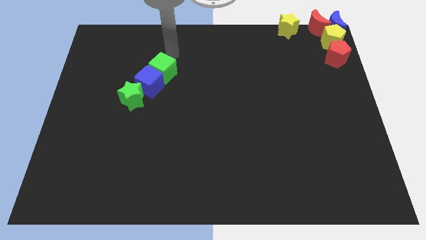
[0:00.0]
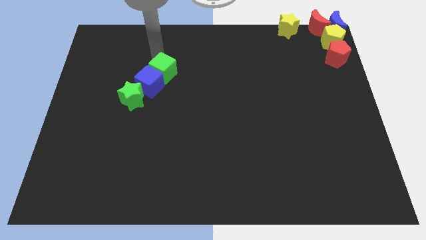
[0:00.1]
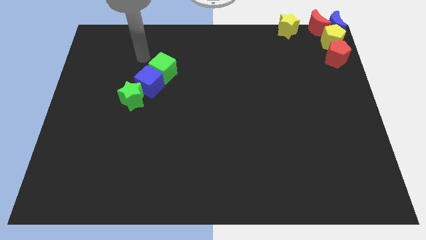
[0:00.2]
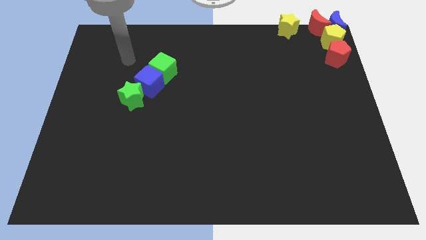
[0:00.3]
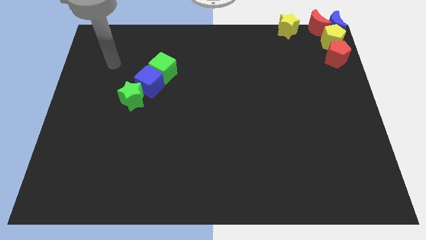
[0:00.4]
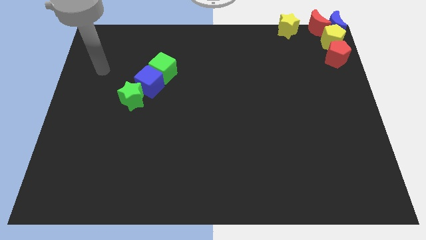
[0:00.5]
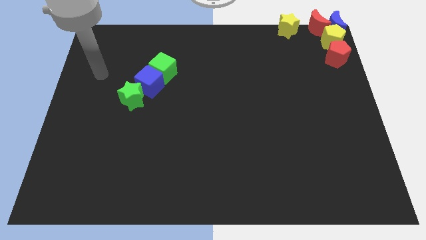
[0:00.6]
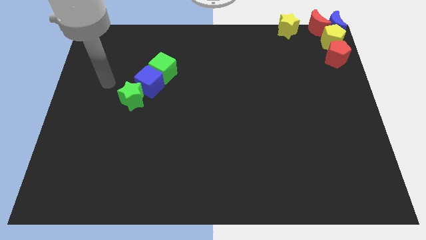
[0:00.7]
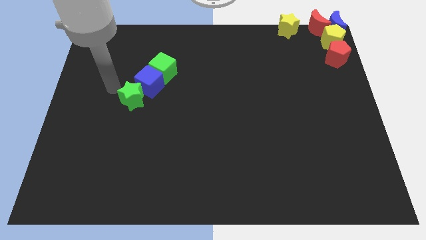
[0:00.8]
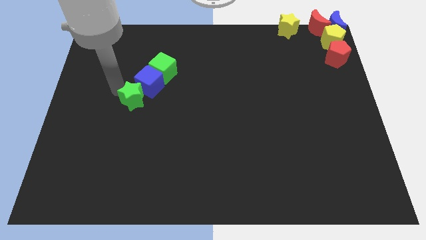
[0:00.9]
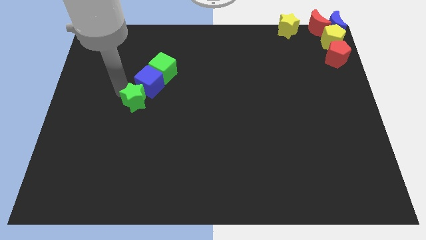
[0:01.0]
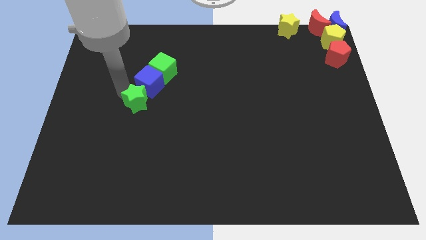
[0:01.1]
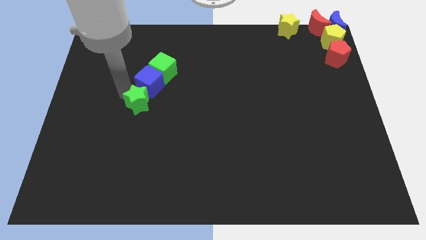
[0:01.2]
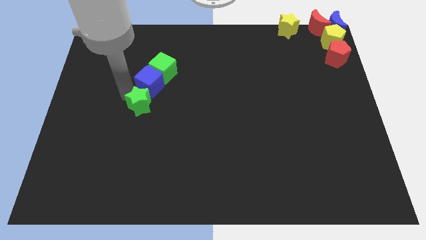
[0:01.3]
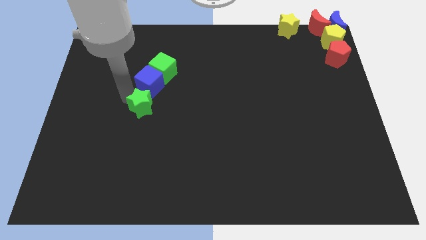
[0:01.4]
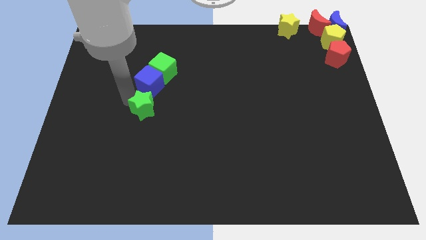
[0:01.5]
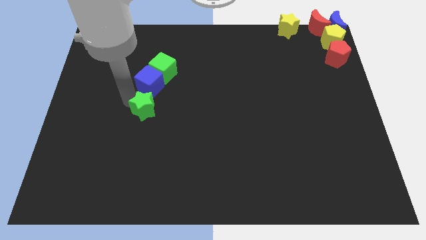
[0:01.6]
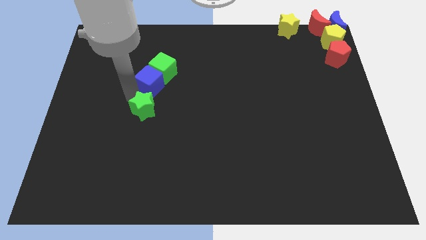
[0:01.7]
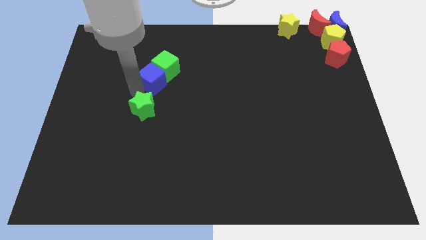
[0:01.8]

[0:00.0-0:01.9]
push the green star slightly towards down

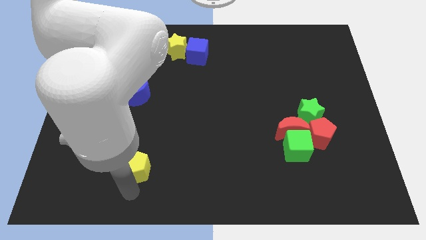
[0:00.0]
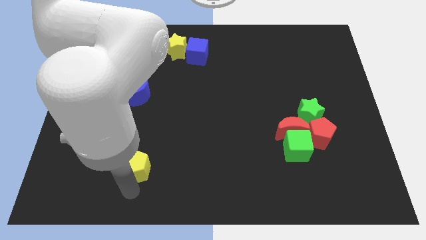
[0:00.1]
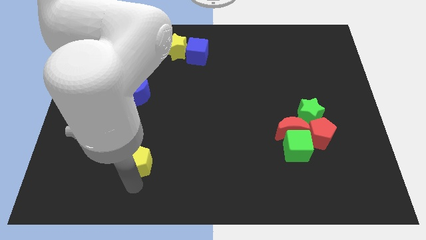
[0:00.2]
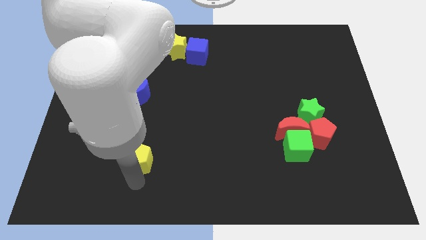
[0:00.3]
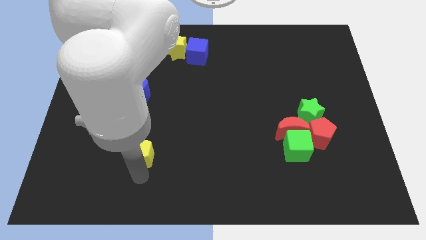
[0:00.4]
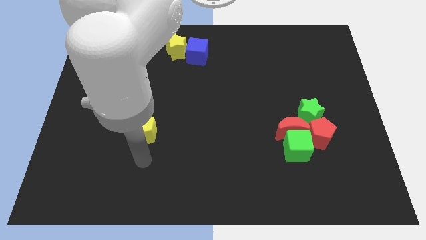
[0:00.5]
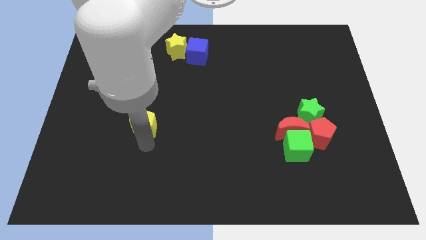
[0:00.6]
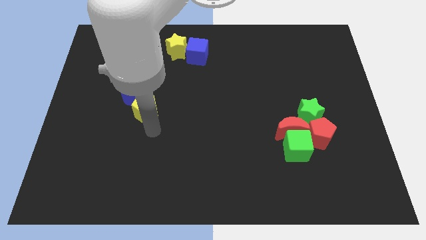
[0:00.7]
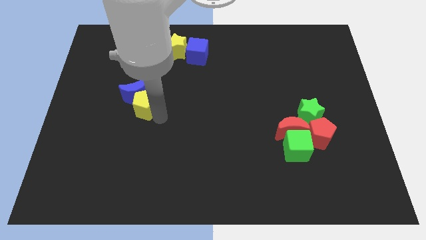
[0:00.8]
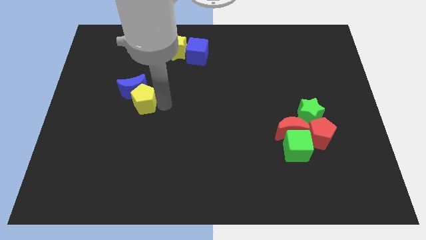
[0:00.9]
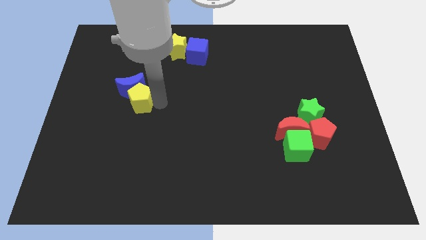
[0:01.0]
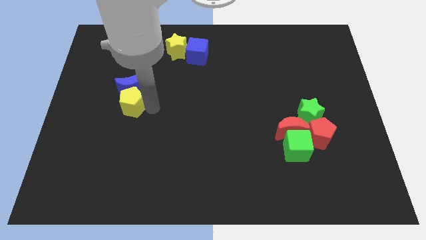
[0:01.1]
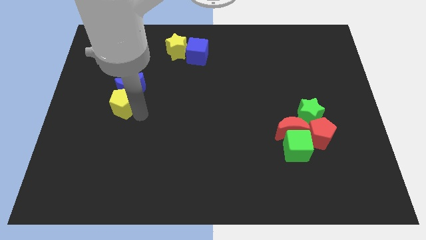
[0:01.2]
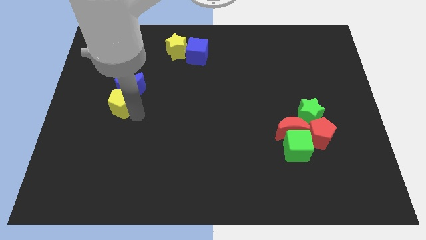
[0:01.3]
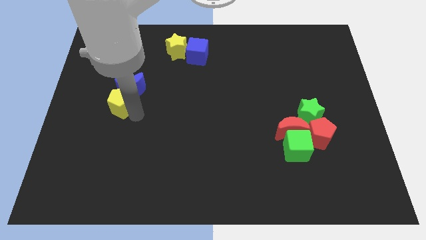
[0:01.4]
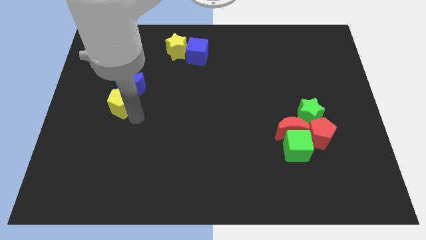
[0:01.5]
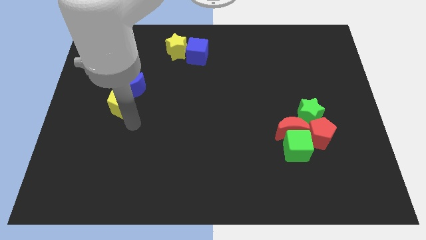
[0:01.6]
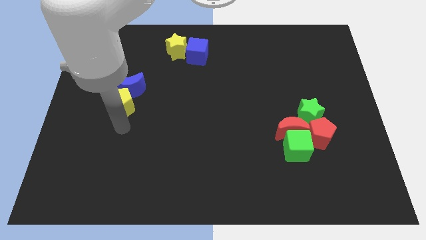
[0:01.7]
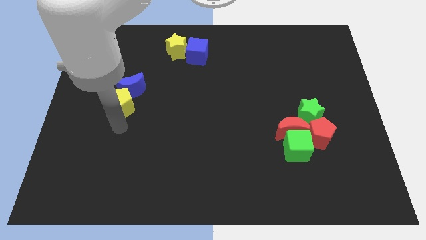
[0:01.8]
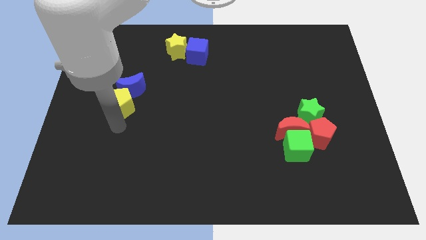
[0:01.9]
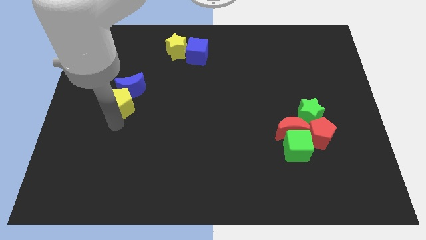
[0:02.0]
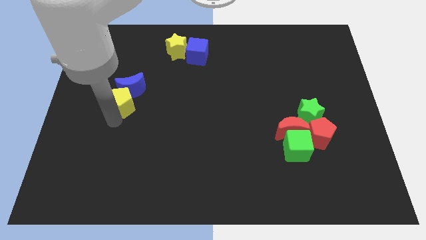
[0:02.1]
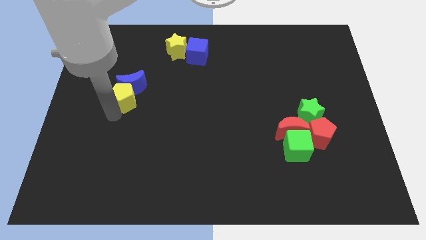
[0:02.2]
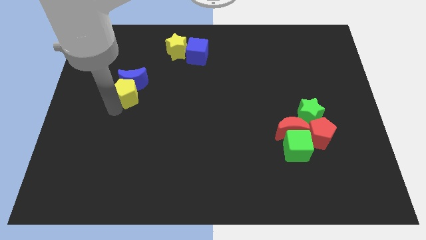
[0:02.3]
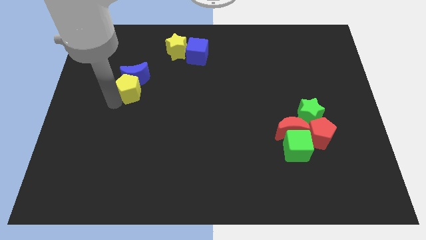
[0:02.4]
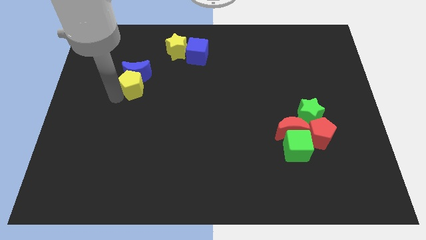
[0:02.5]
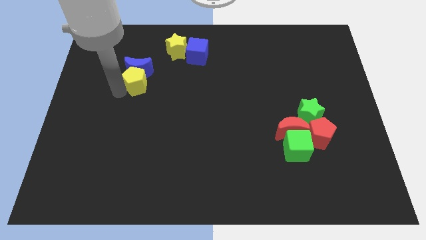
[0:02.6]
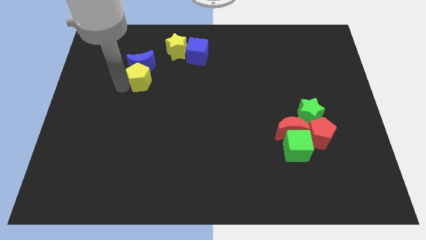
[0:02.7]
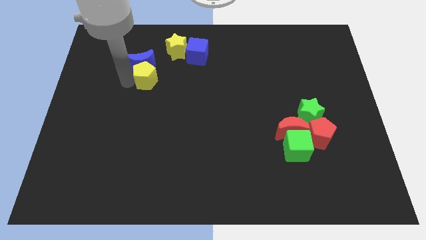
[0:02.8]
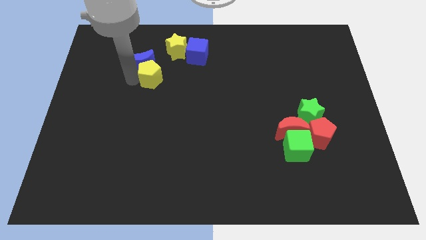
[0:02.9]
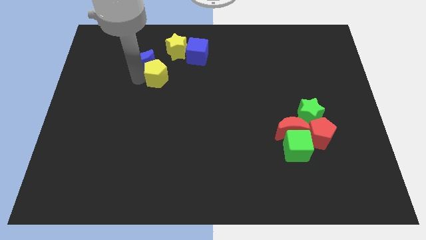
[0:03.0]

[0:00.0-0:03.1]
move the yellow pentagon and the blue moon towards top

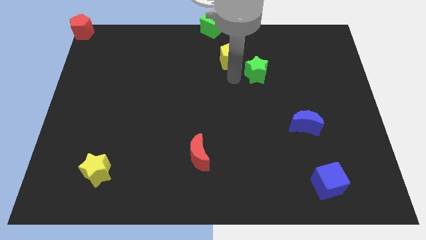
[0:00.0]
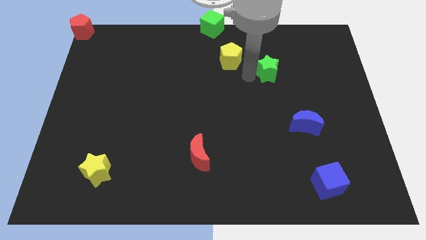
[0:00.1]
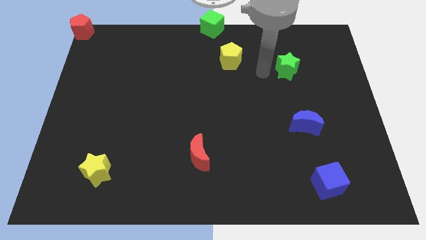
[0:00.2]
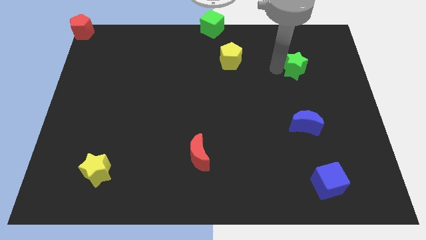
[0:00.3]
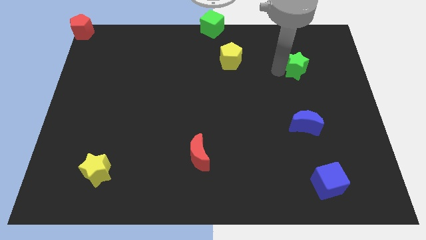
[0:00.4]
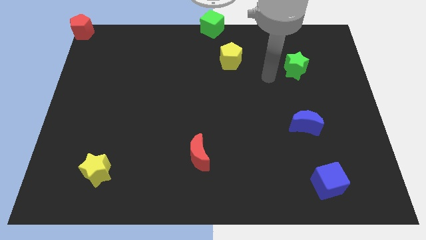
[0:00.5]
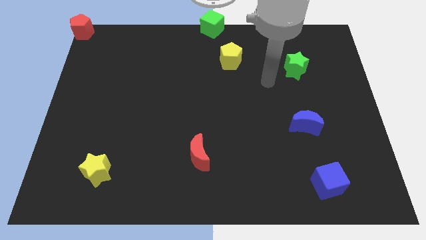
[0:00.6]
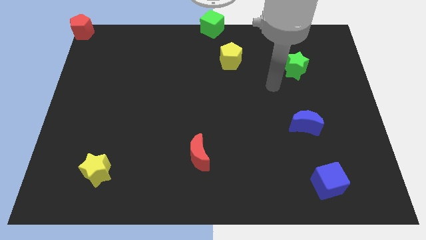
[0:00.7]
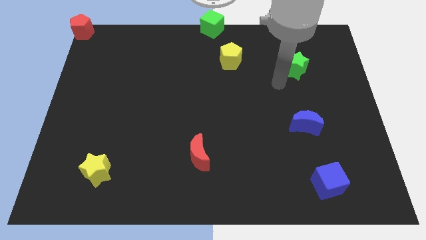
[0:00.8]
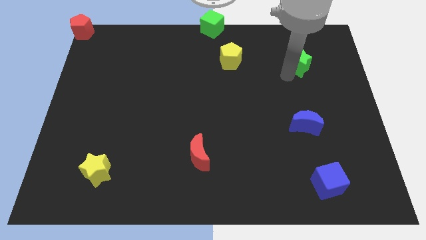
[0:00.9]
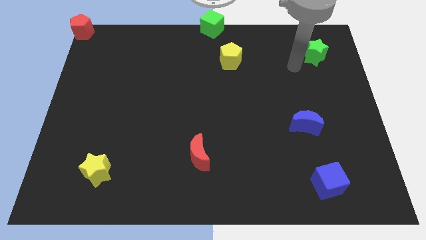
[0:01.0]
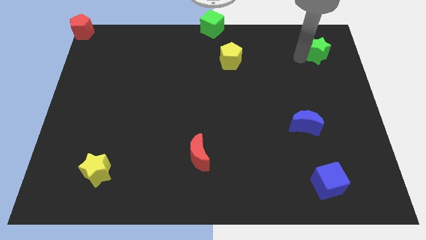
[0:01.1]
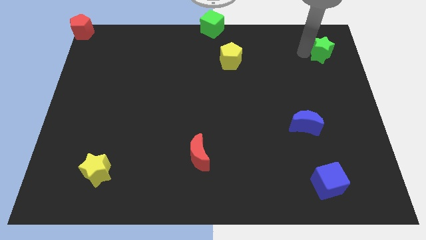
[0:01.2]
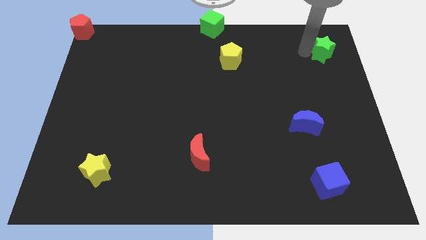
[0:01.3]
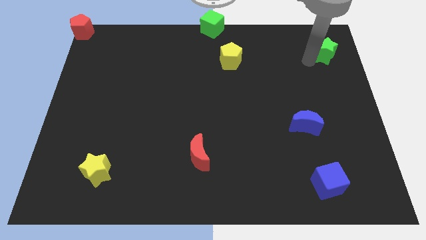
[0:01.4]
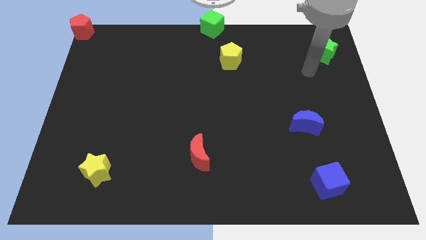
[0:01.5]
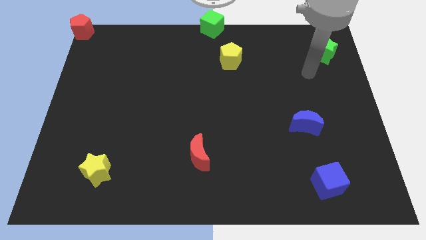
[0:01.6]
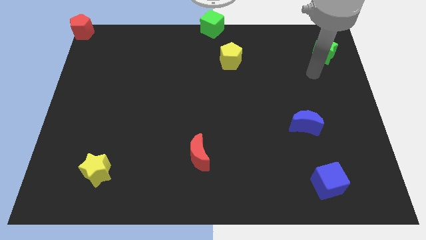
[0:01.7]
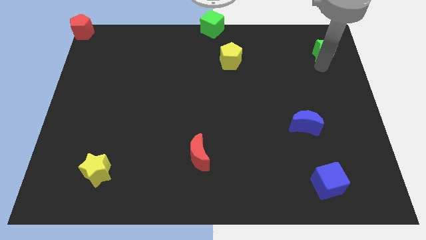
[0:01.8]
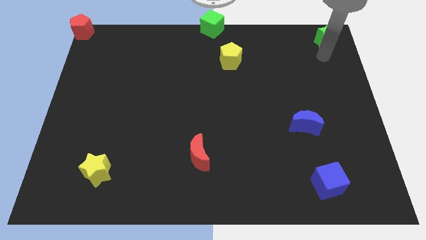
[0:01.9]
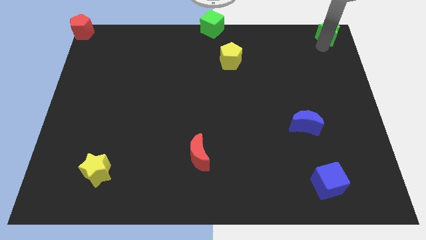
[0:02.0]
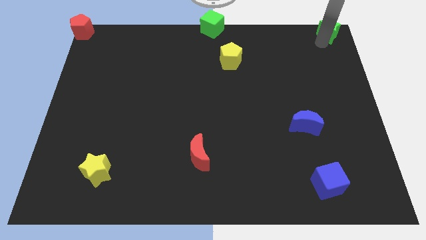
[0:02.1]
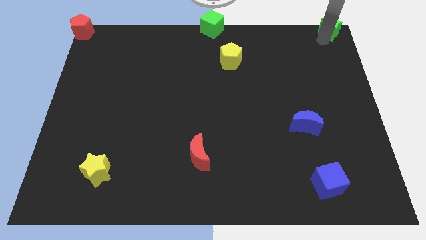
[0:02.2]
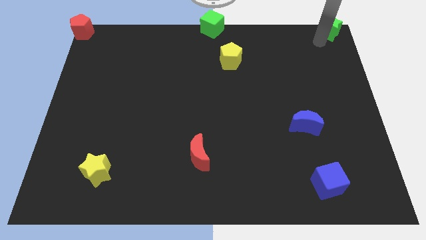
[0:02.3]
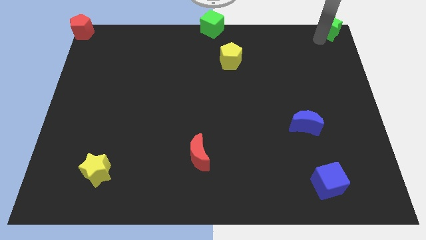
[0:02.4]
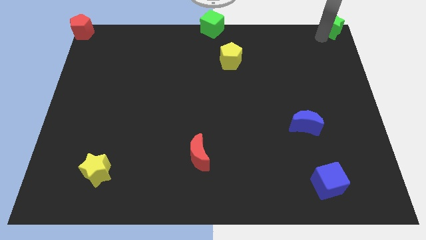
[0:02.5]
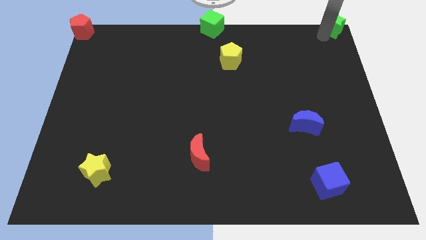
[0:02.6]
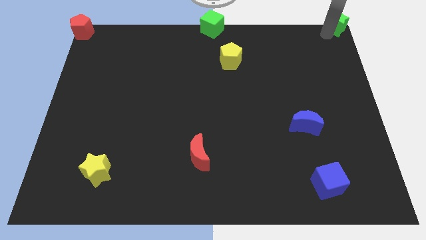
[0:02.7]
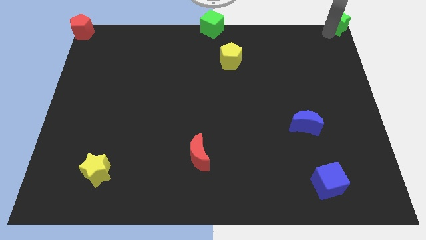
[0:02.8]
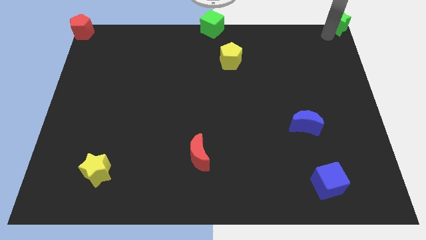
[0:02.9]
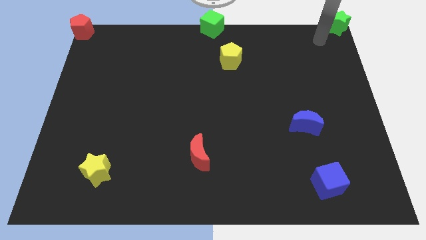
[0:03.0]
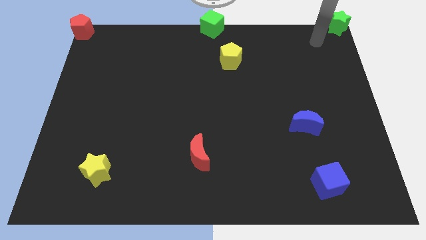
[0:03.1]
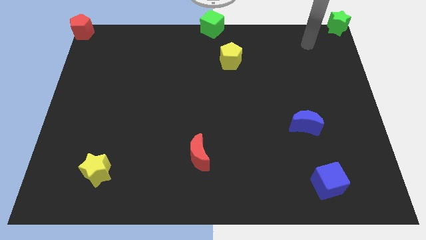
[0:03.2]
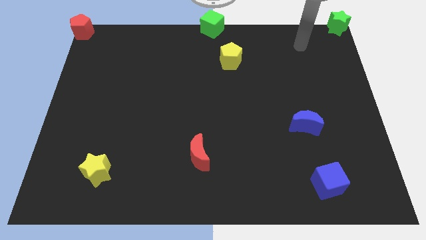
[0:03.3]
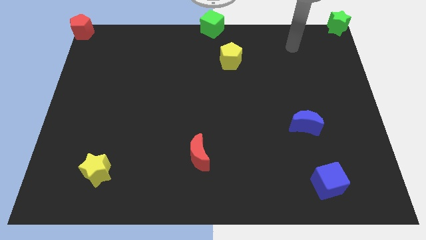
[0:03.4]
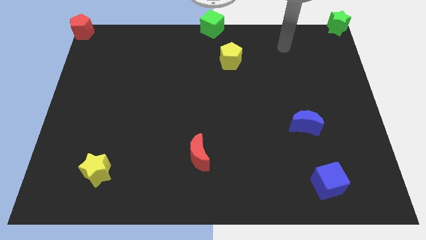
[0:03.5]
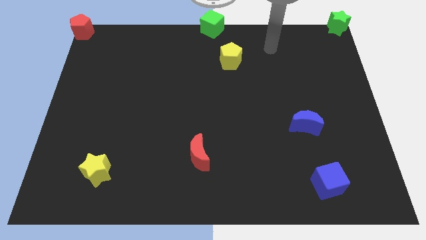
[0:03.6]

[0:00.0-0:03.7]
push the green star to the top right of the board
